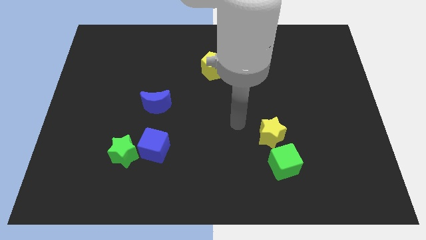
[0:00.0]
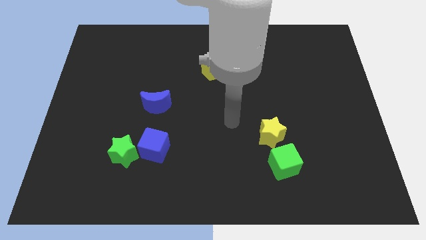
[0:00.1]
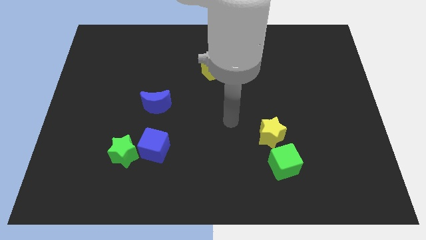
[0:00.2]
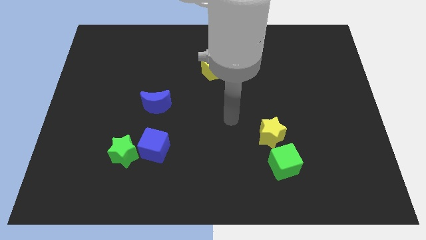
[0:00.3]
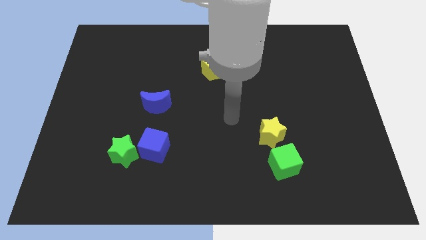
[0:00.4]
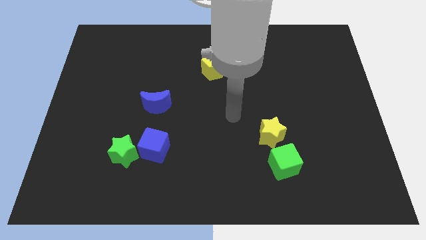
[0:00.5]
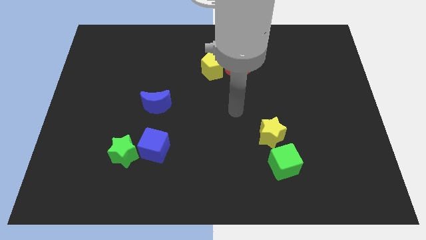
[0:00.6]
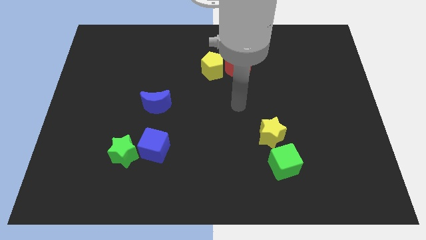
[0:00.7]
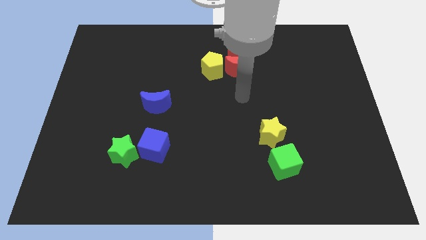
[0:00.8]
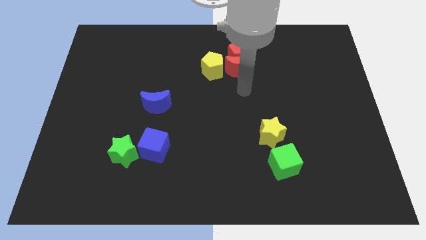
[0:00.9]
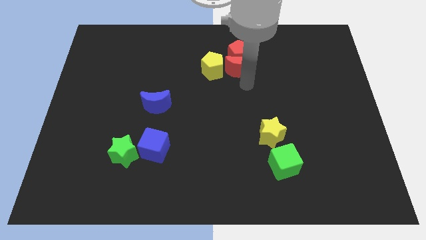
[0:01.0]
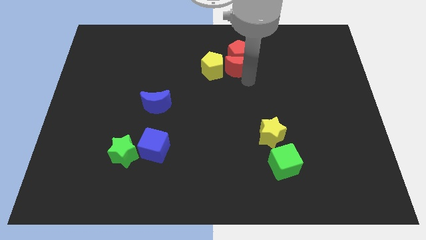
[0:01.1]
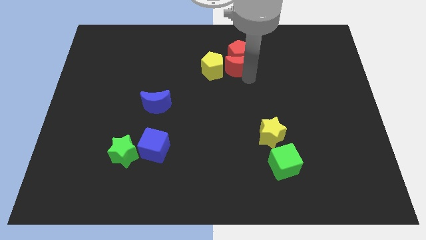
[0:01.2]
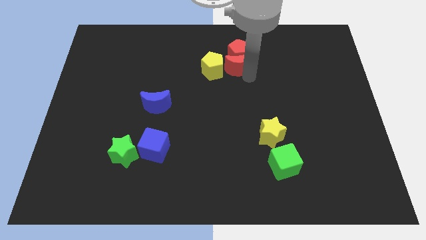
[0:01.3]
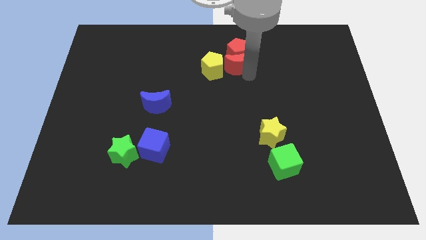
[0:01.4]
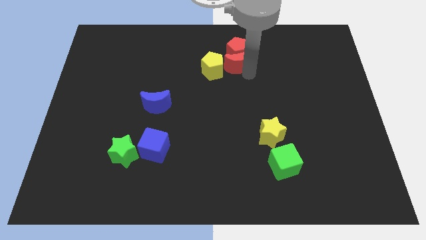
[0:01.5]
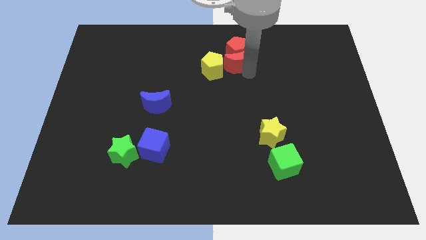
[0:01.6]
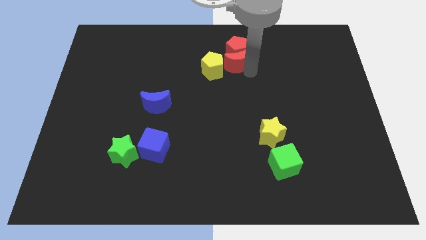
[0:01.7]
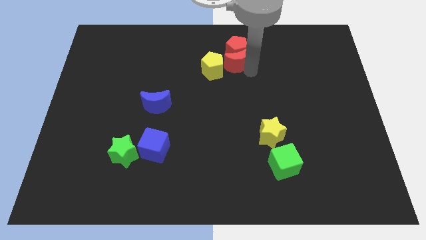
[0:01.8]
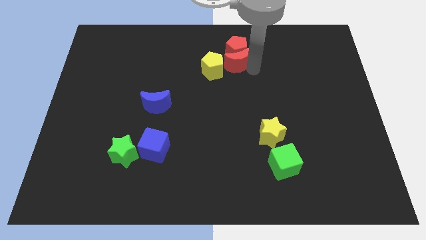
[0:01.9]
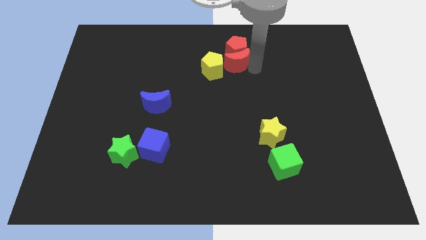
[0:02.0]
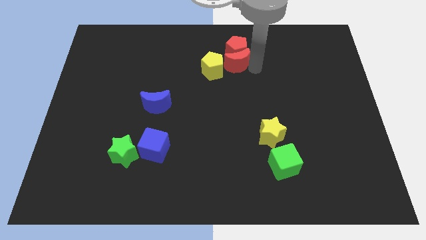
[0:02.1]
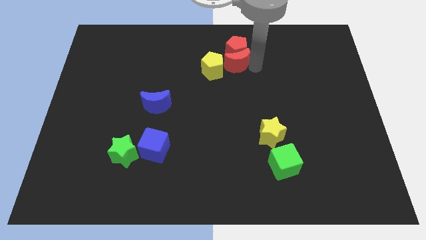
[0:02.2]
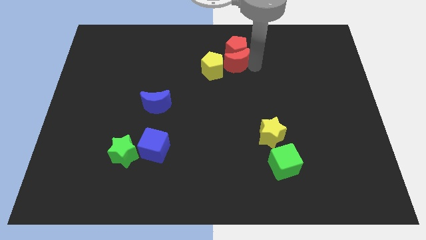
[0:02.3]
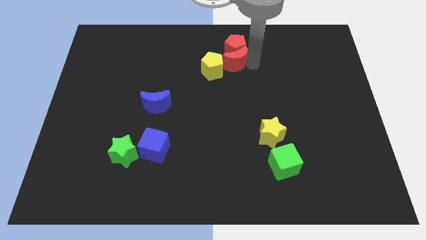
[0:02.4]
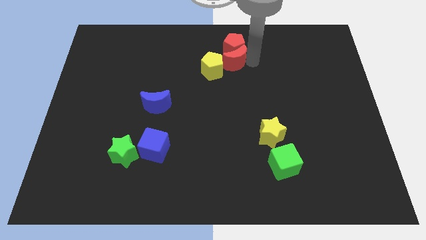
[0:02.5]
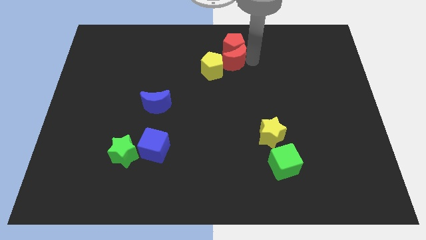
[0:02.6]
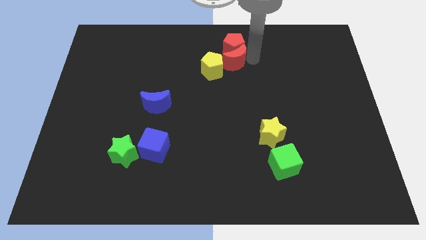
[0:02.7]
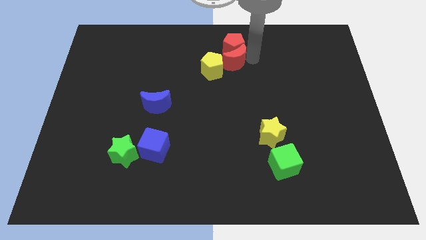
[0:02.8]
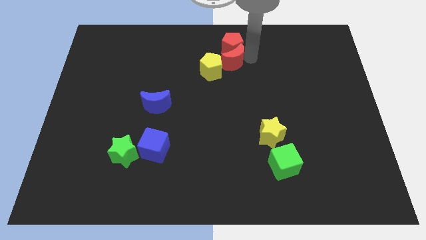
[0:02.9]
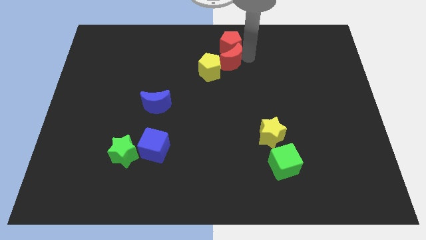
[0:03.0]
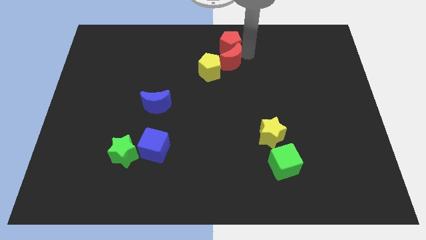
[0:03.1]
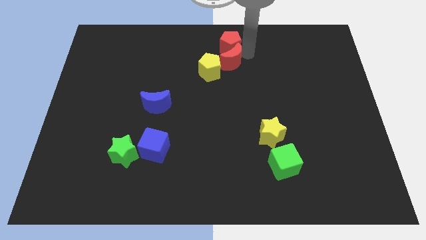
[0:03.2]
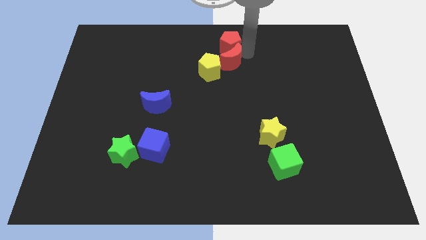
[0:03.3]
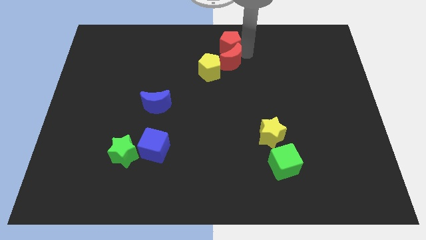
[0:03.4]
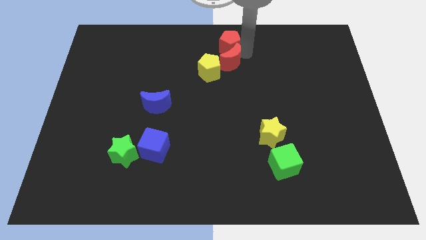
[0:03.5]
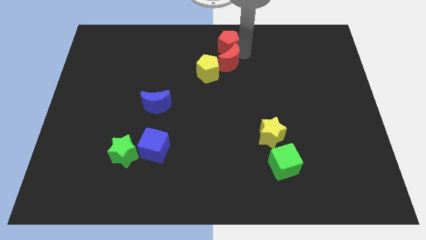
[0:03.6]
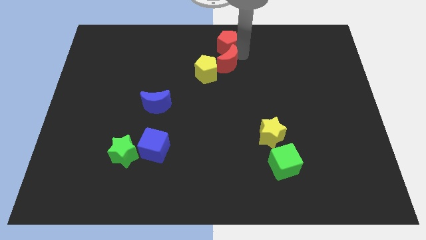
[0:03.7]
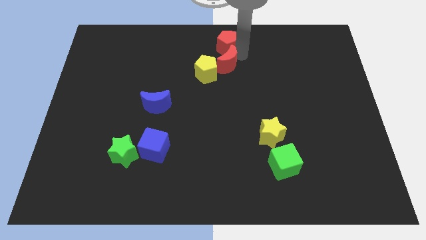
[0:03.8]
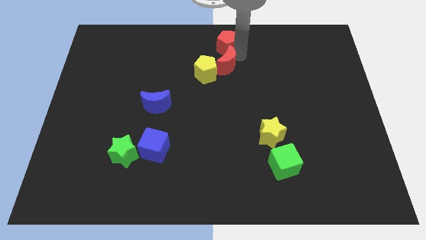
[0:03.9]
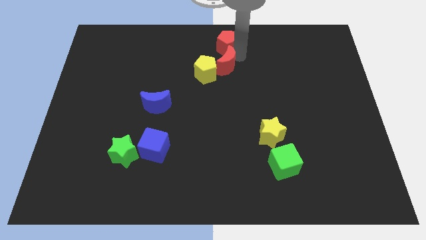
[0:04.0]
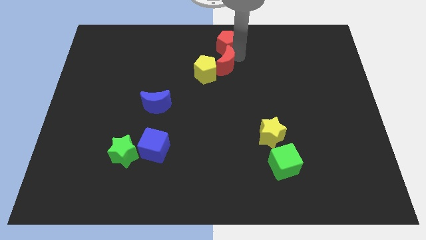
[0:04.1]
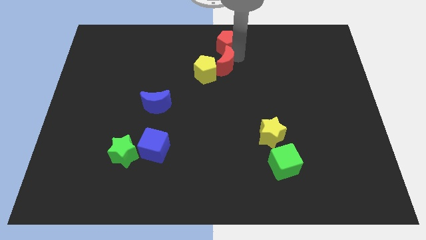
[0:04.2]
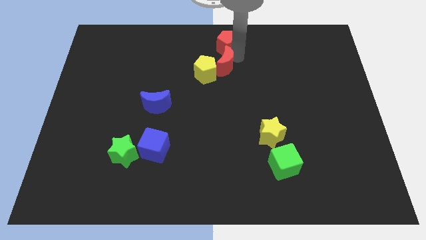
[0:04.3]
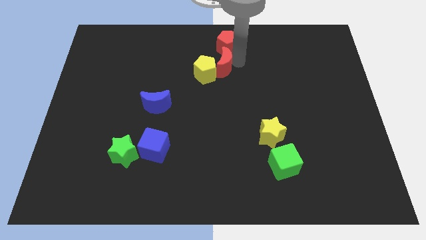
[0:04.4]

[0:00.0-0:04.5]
move the red crescent to the bottom side of the red pentagon

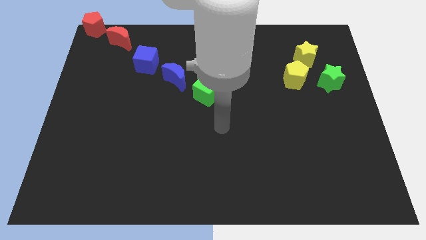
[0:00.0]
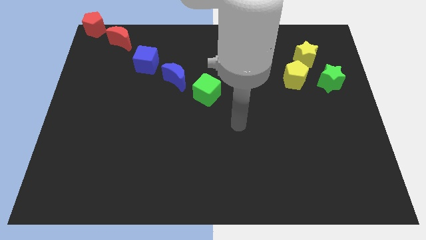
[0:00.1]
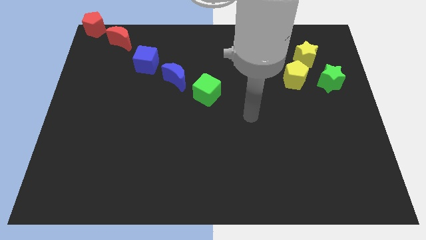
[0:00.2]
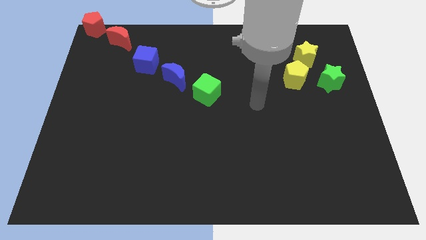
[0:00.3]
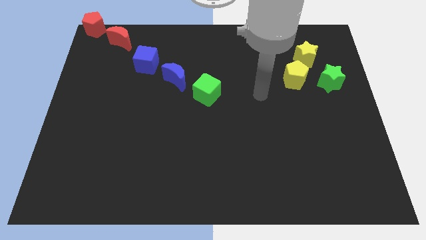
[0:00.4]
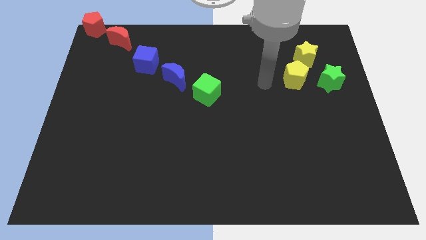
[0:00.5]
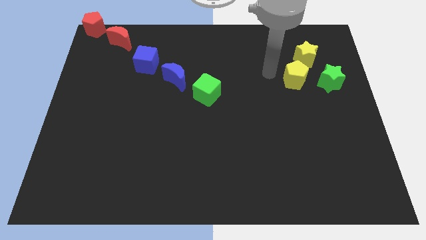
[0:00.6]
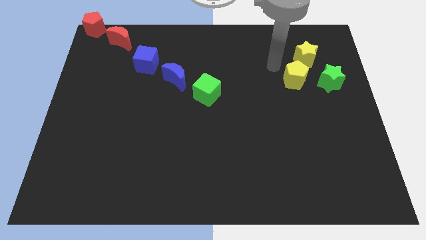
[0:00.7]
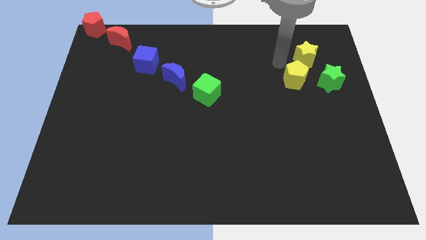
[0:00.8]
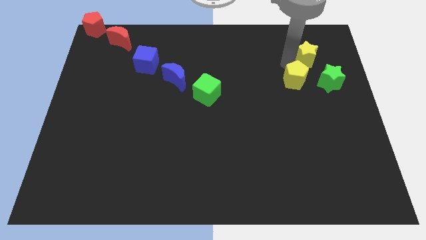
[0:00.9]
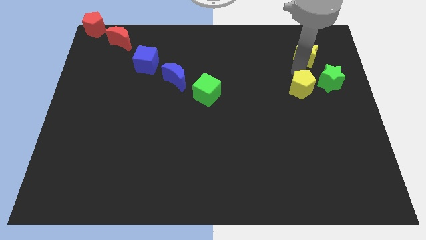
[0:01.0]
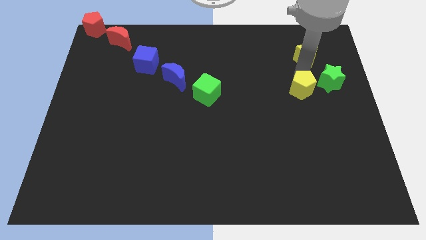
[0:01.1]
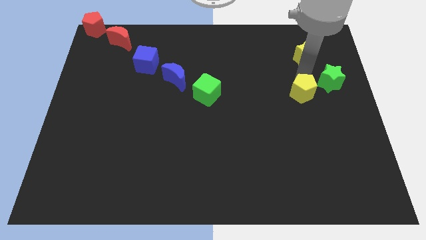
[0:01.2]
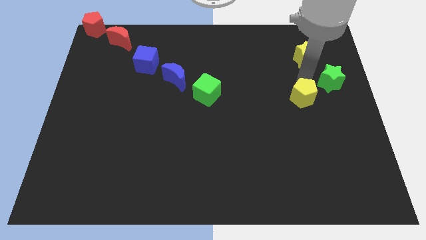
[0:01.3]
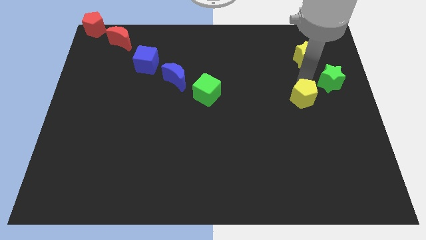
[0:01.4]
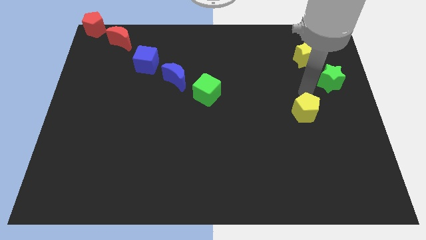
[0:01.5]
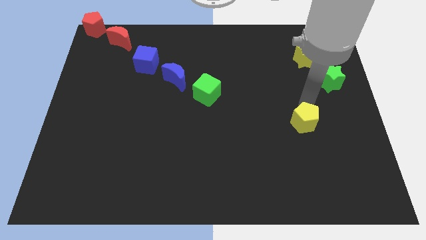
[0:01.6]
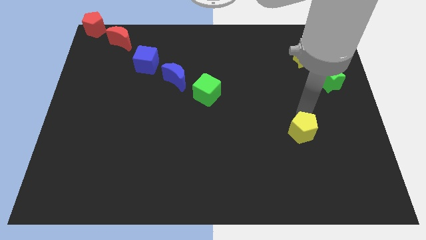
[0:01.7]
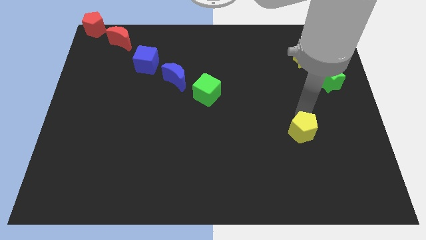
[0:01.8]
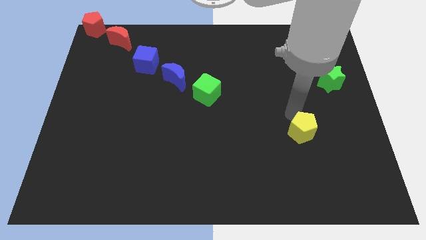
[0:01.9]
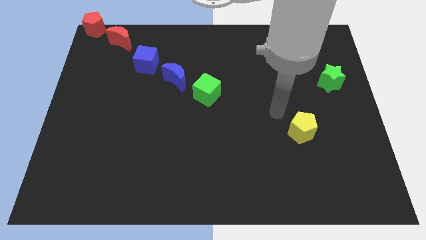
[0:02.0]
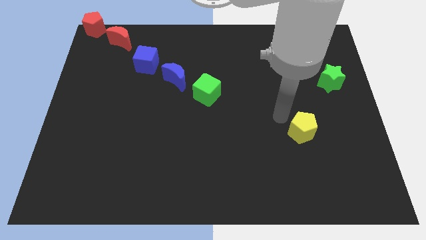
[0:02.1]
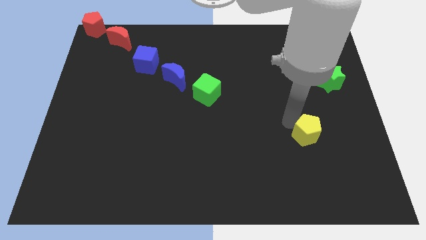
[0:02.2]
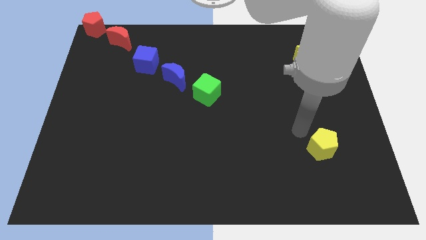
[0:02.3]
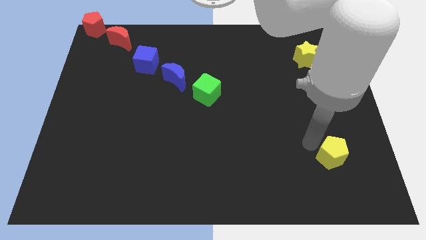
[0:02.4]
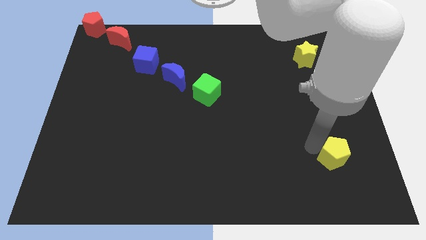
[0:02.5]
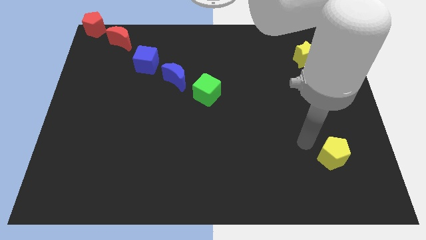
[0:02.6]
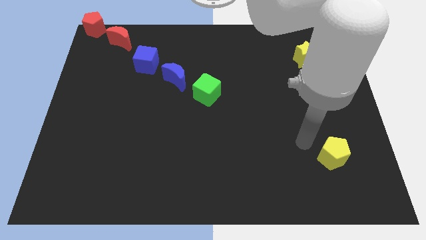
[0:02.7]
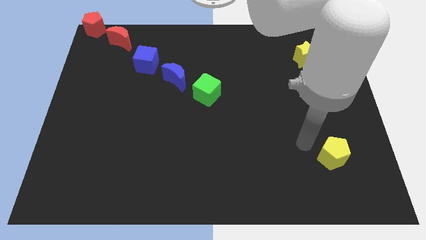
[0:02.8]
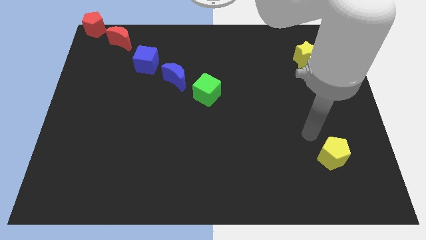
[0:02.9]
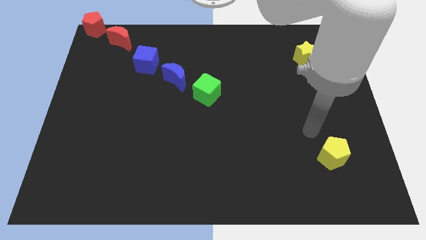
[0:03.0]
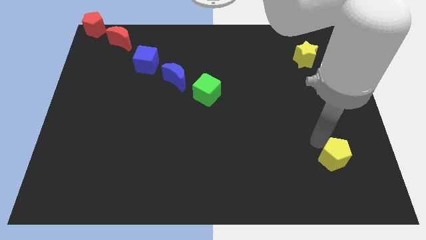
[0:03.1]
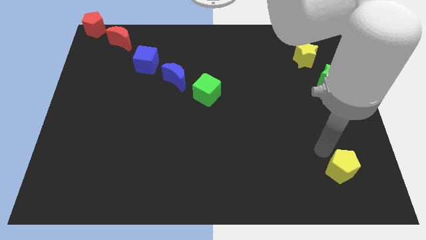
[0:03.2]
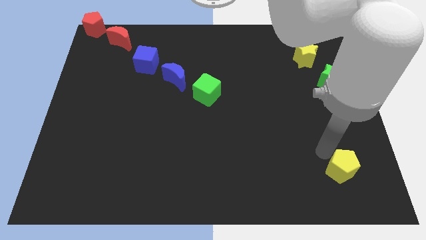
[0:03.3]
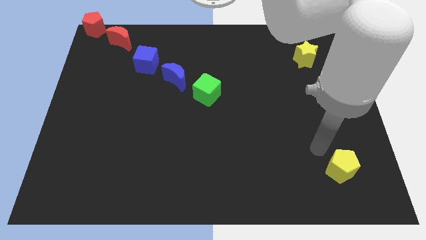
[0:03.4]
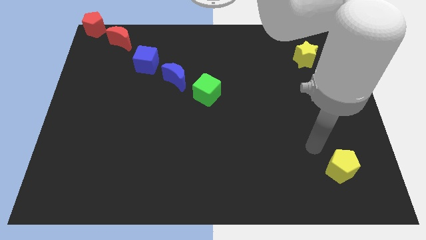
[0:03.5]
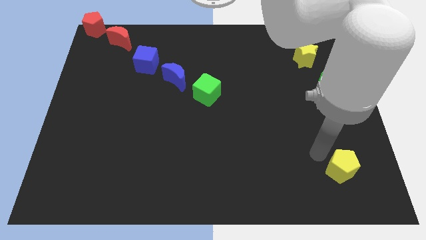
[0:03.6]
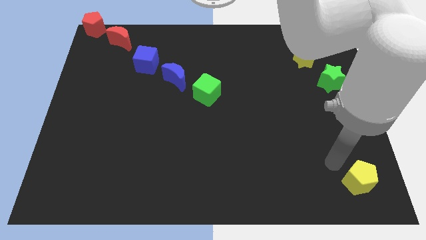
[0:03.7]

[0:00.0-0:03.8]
separate the yellow pentagon from the yellow star

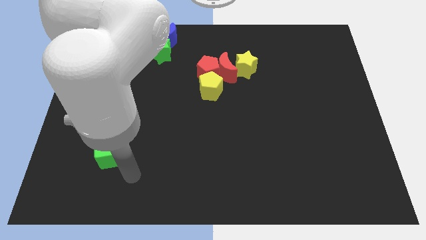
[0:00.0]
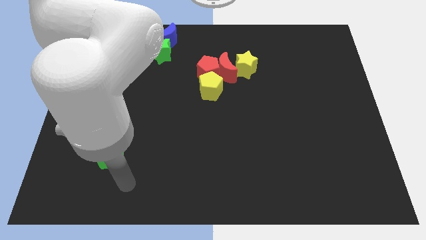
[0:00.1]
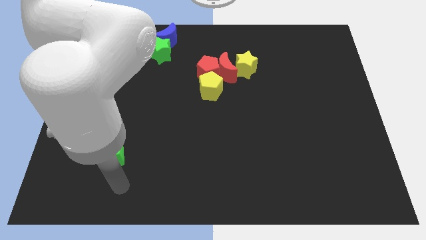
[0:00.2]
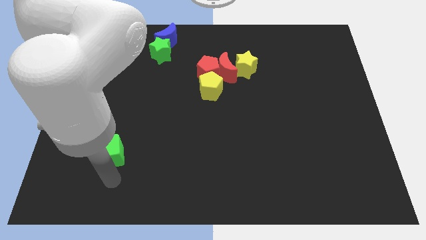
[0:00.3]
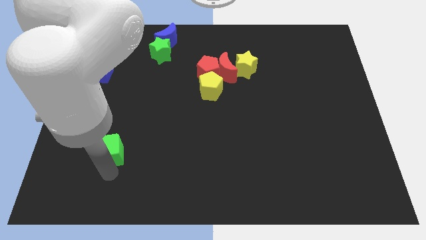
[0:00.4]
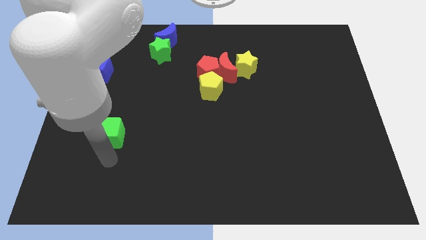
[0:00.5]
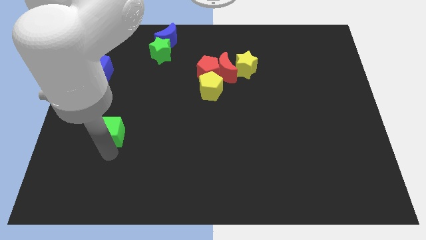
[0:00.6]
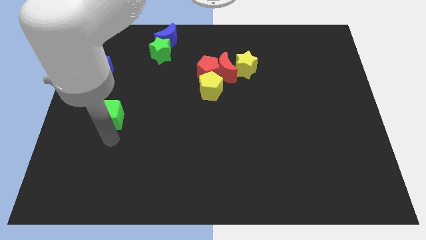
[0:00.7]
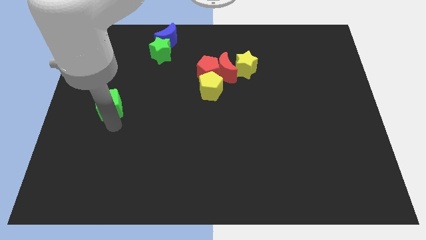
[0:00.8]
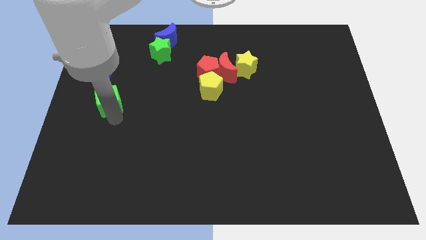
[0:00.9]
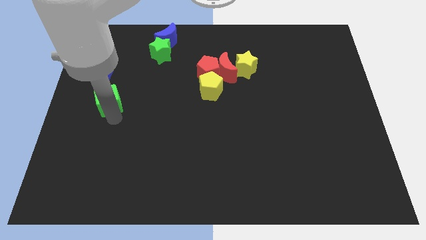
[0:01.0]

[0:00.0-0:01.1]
move the green cube to the top of the board
